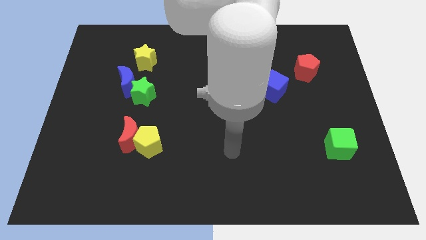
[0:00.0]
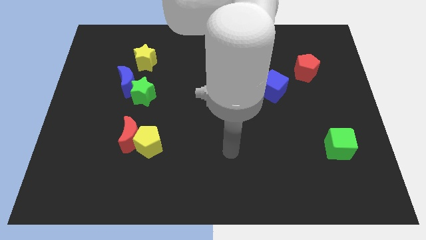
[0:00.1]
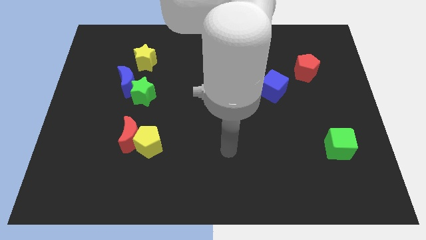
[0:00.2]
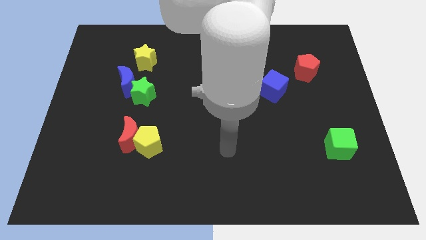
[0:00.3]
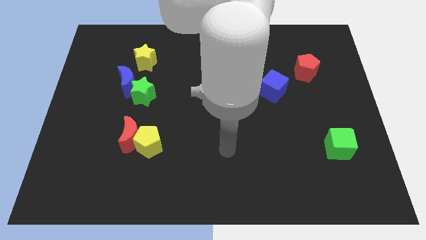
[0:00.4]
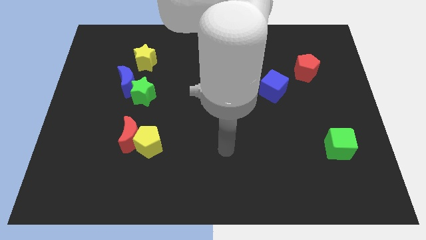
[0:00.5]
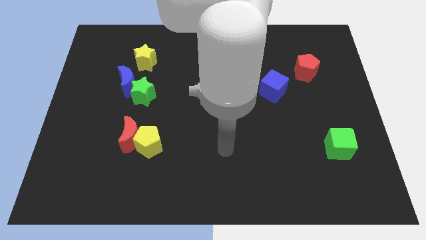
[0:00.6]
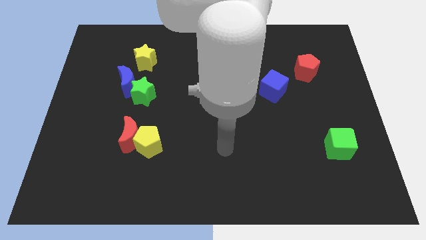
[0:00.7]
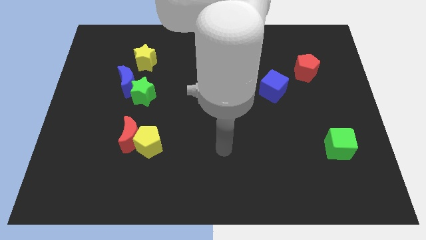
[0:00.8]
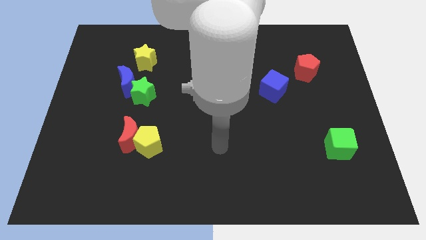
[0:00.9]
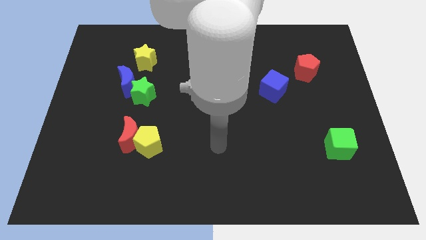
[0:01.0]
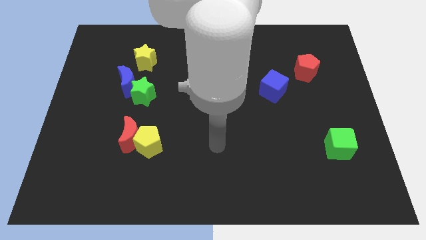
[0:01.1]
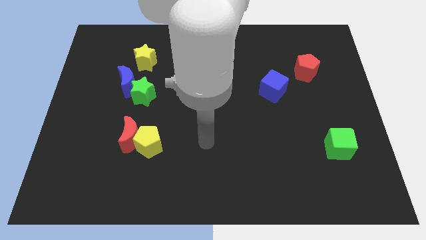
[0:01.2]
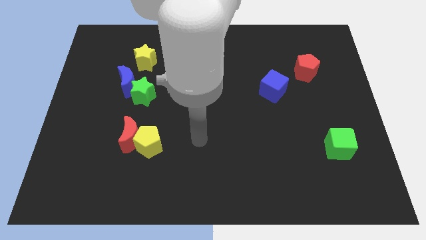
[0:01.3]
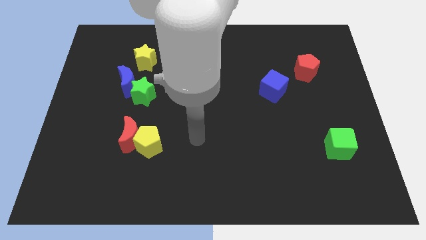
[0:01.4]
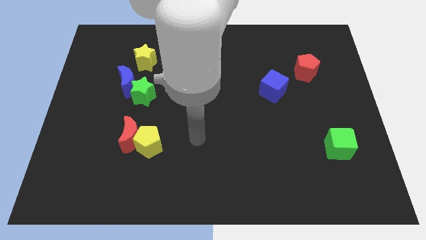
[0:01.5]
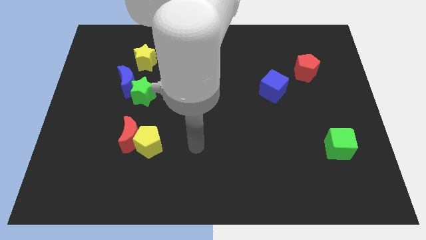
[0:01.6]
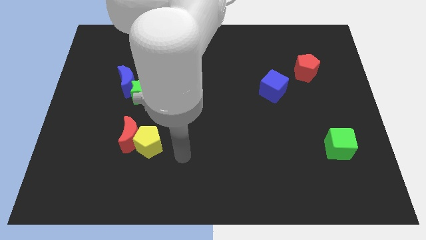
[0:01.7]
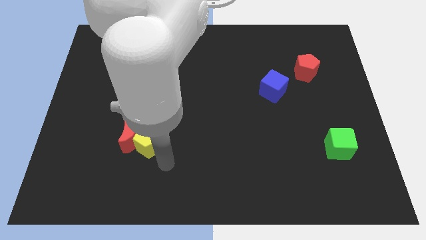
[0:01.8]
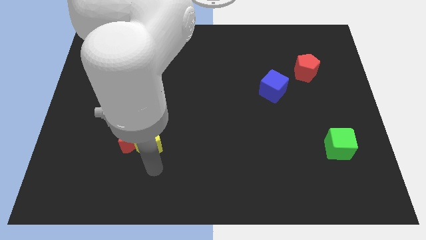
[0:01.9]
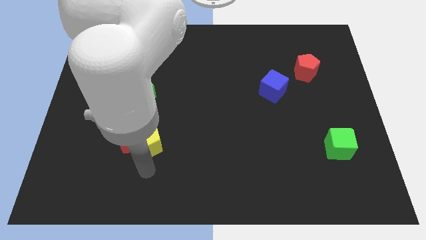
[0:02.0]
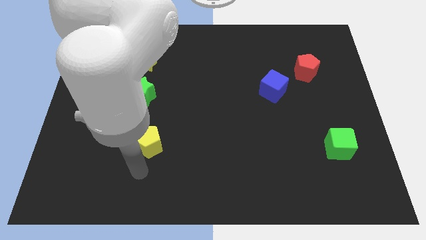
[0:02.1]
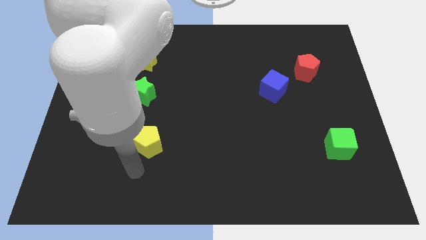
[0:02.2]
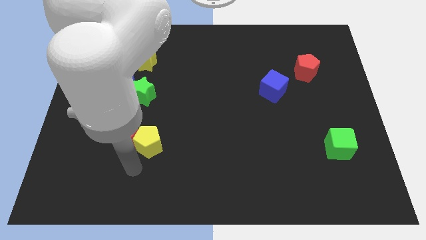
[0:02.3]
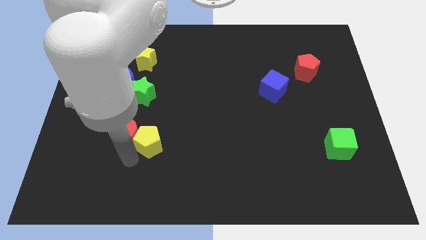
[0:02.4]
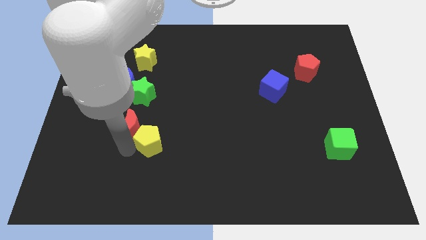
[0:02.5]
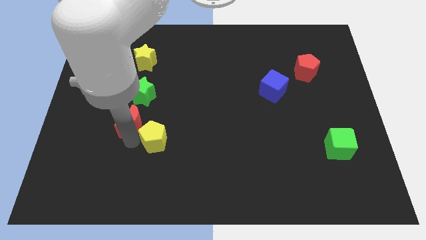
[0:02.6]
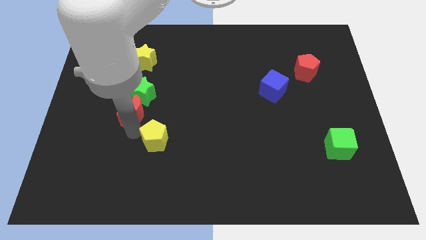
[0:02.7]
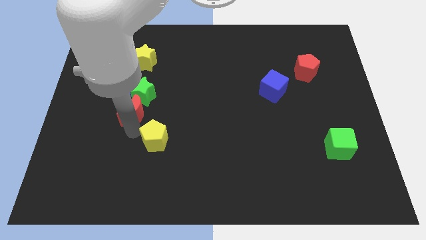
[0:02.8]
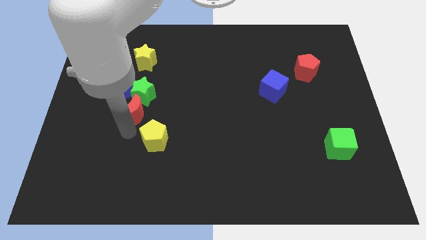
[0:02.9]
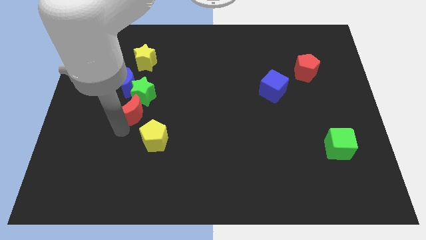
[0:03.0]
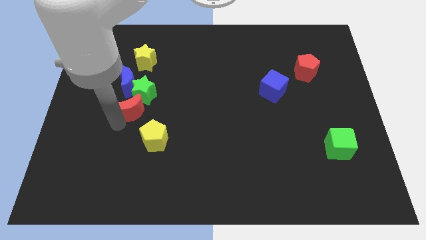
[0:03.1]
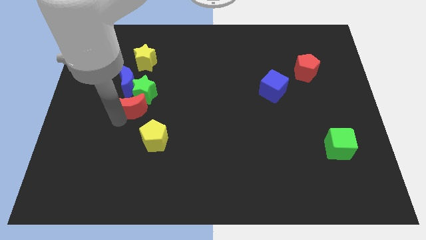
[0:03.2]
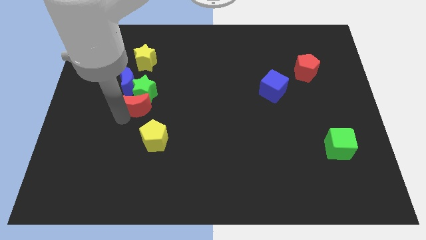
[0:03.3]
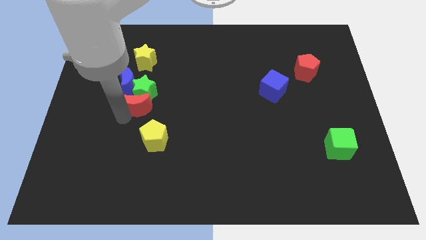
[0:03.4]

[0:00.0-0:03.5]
move the red crescent into the green star

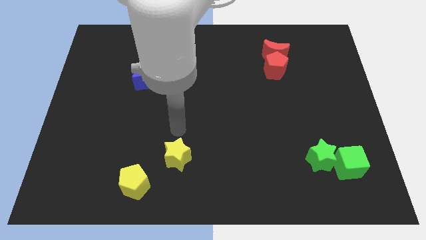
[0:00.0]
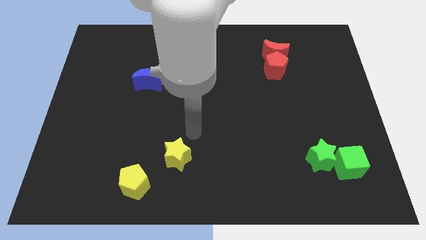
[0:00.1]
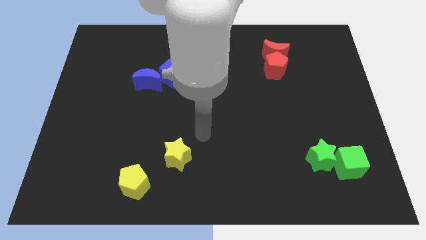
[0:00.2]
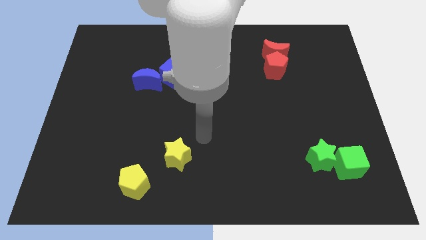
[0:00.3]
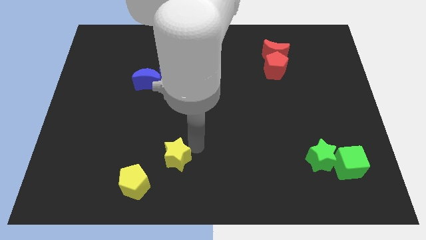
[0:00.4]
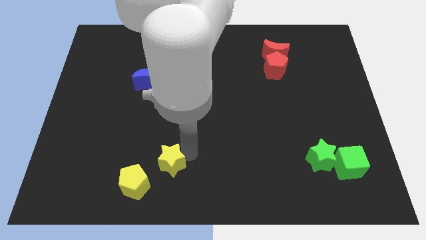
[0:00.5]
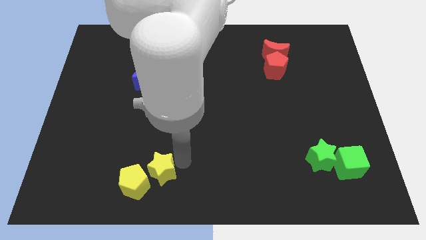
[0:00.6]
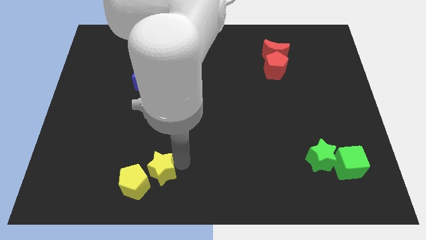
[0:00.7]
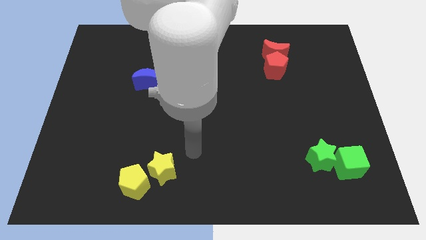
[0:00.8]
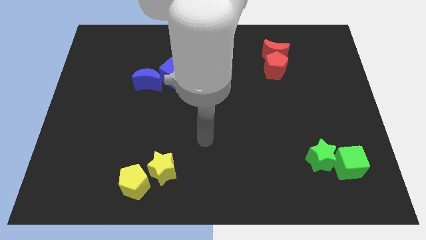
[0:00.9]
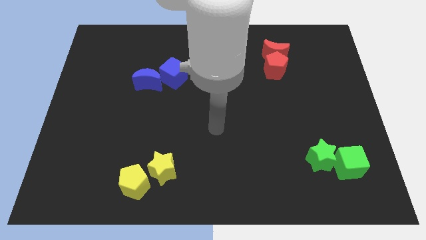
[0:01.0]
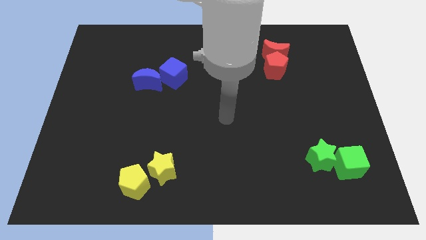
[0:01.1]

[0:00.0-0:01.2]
move the yellow star close to the yellow pentagon

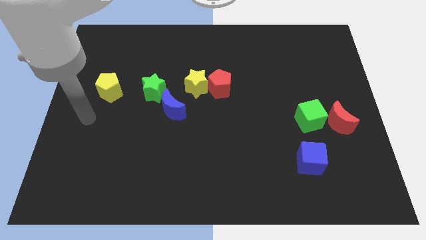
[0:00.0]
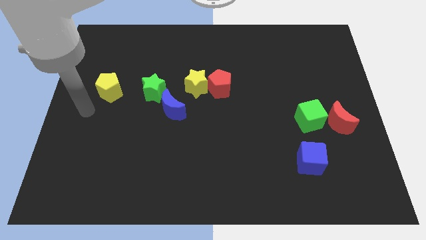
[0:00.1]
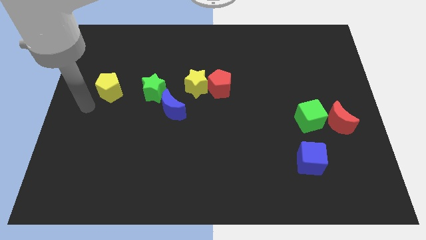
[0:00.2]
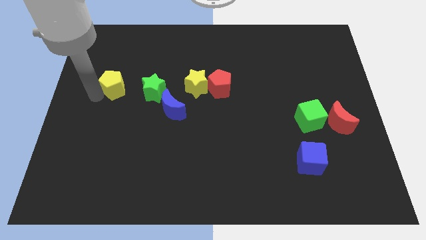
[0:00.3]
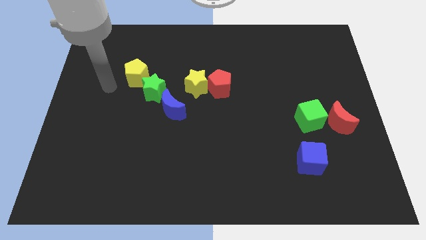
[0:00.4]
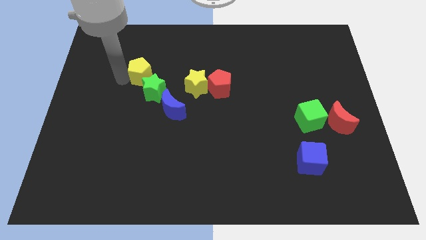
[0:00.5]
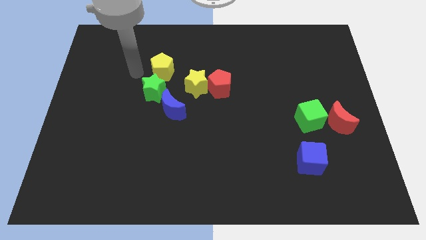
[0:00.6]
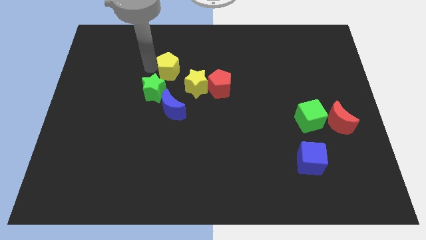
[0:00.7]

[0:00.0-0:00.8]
place the yellow pentagon above the green star

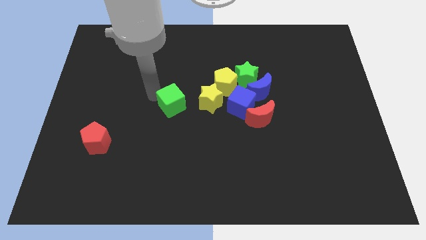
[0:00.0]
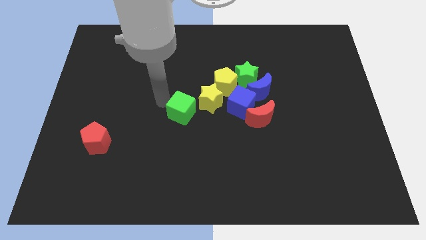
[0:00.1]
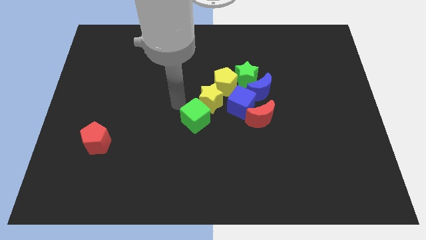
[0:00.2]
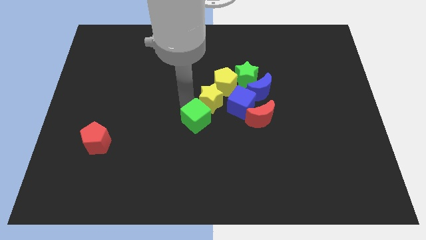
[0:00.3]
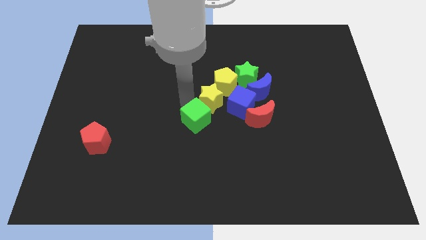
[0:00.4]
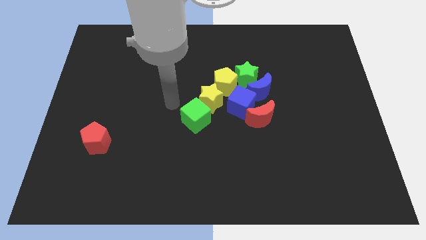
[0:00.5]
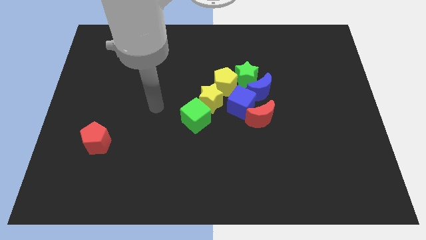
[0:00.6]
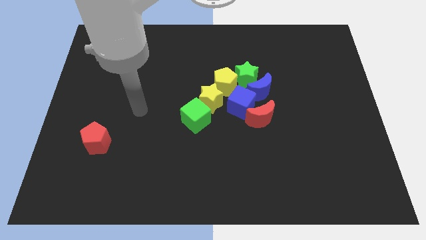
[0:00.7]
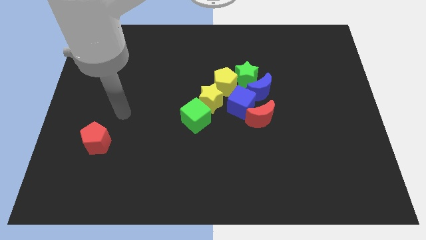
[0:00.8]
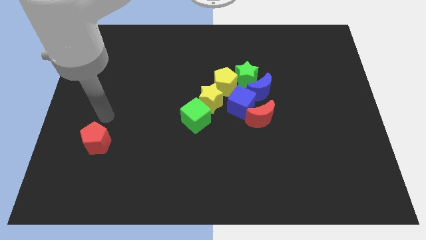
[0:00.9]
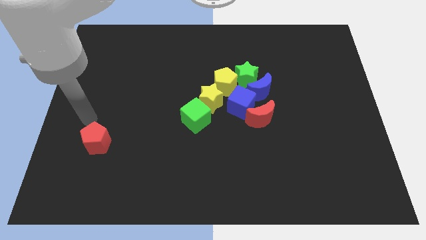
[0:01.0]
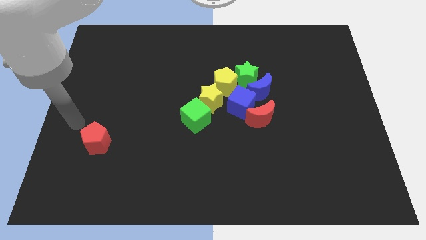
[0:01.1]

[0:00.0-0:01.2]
place the green cube to the bottom of yellow star

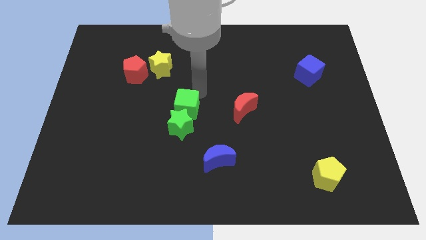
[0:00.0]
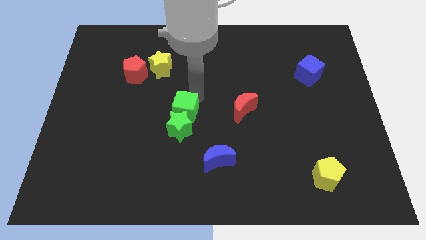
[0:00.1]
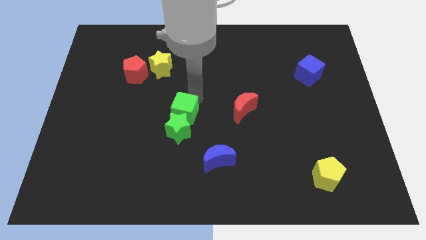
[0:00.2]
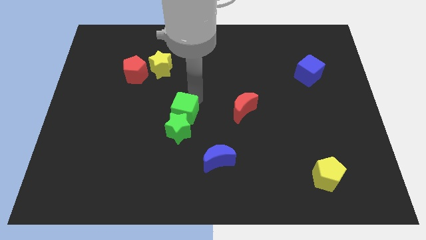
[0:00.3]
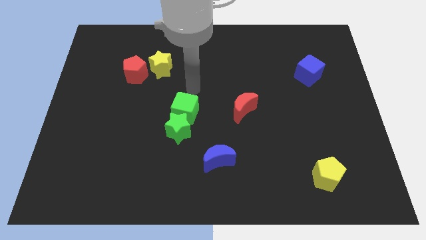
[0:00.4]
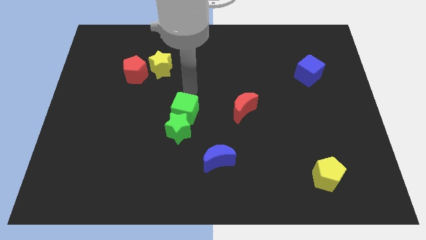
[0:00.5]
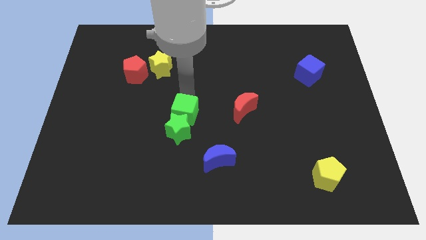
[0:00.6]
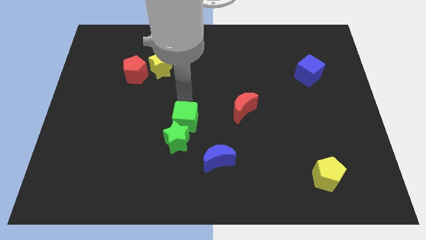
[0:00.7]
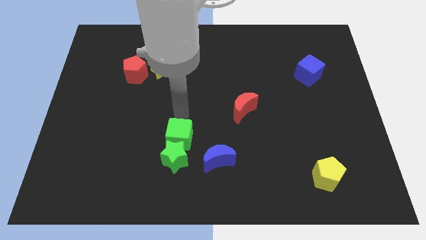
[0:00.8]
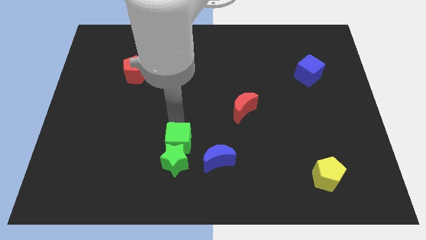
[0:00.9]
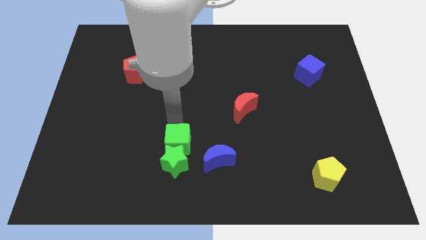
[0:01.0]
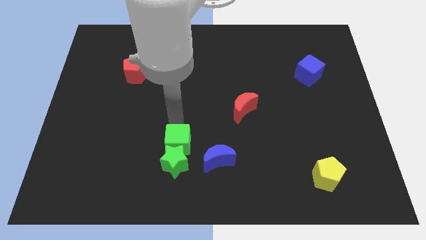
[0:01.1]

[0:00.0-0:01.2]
move the green cube along with green star to the left of the blue crescent

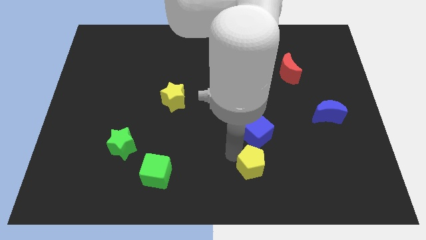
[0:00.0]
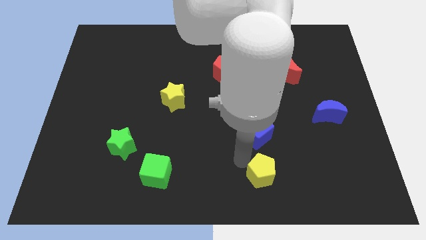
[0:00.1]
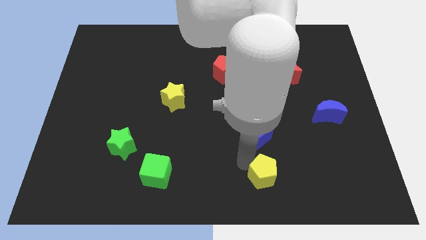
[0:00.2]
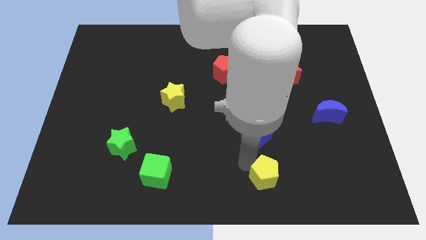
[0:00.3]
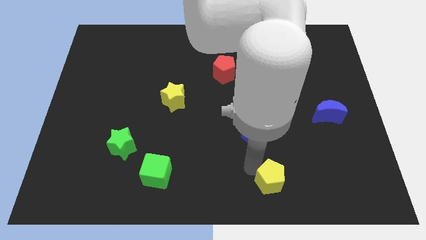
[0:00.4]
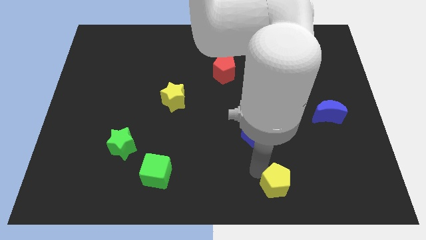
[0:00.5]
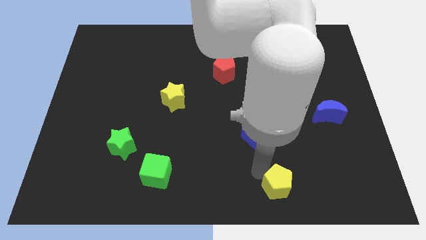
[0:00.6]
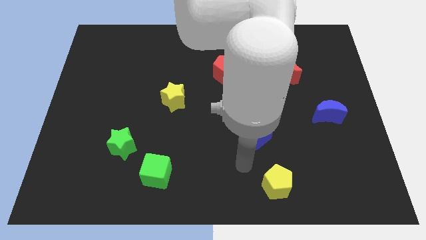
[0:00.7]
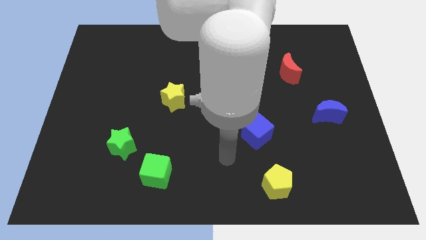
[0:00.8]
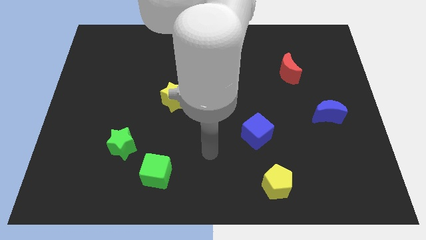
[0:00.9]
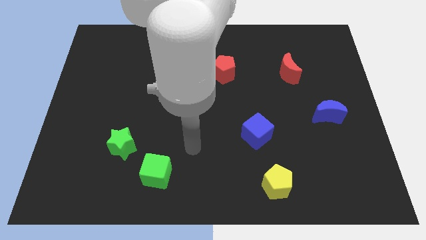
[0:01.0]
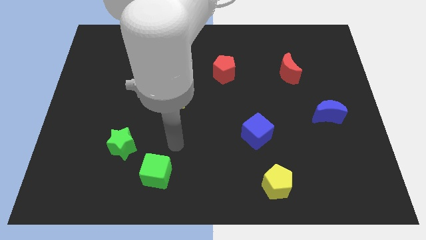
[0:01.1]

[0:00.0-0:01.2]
move the yellow pentagon to the bottom of the board
